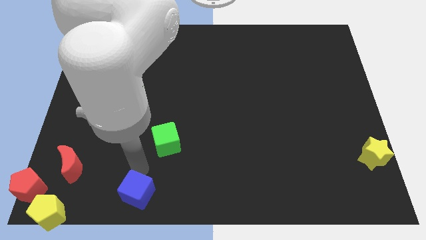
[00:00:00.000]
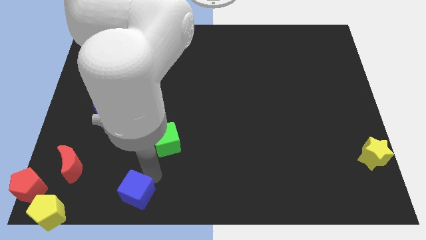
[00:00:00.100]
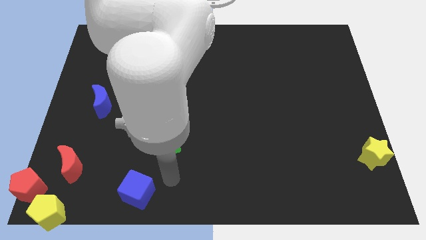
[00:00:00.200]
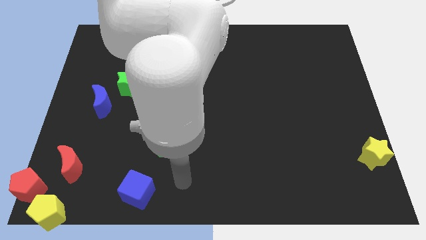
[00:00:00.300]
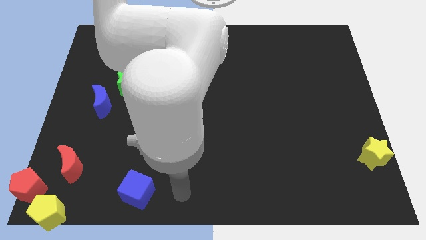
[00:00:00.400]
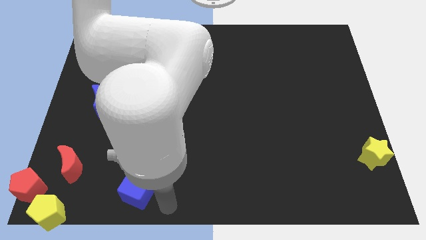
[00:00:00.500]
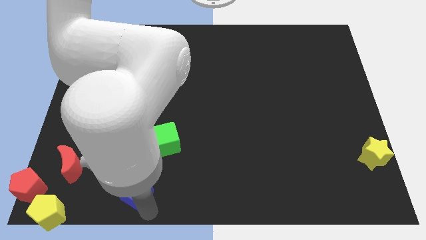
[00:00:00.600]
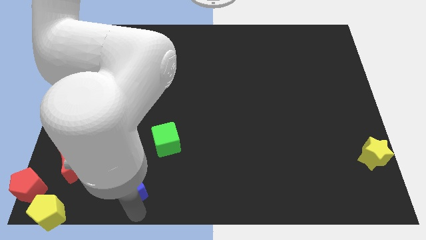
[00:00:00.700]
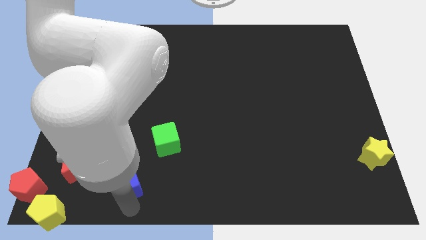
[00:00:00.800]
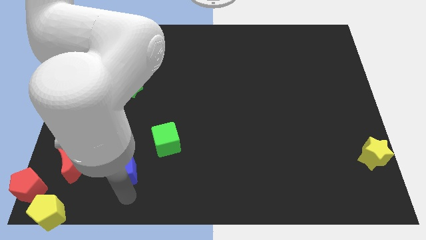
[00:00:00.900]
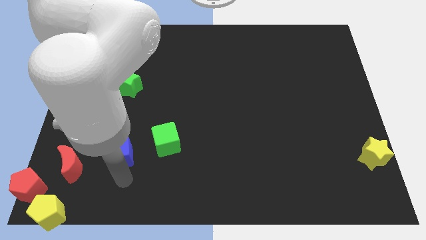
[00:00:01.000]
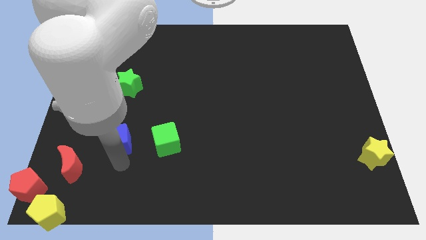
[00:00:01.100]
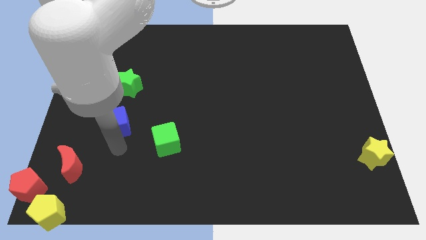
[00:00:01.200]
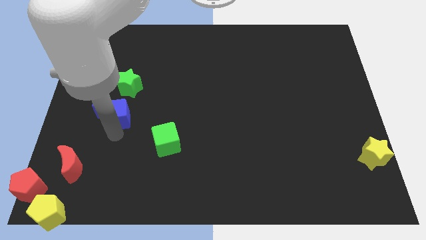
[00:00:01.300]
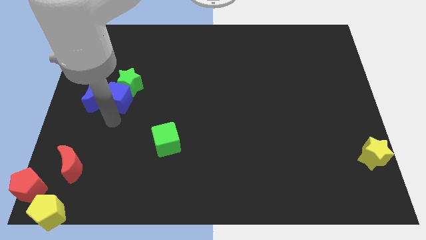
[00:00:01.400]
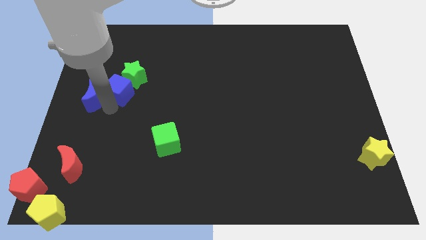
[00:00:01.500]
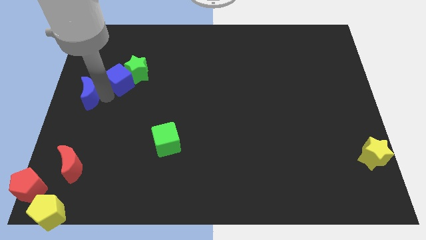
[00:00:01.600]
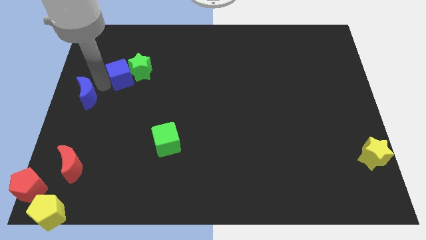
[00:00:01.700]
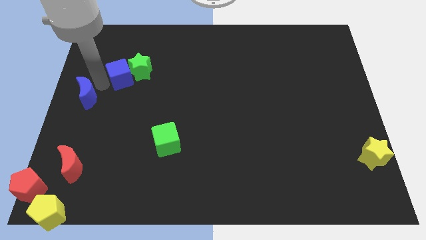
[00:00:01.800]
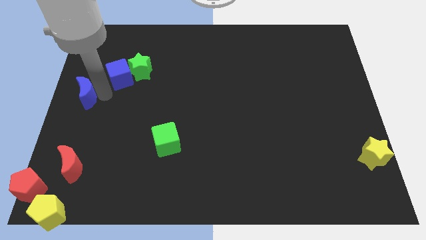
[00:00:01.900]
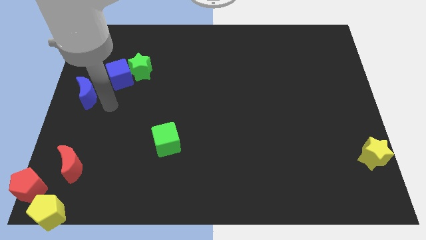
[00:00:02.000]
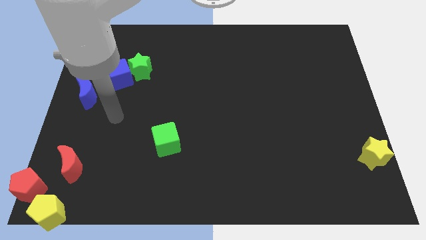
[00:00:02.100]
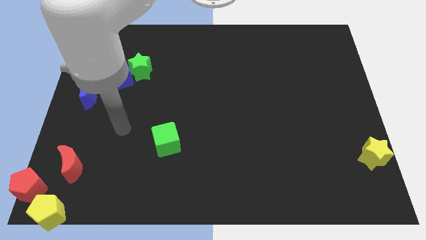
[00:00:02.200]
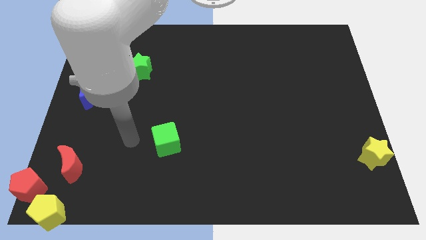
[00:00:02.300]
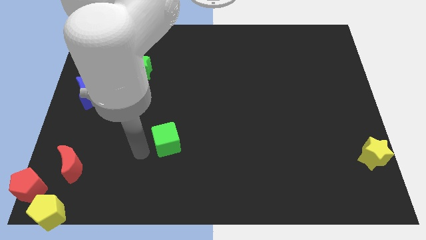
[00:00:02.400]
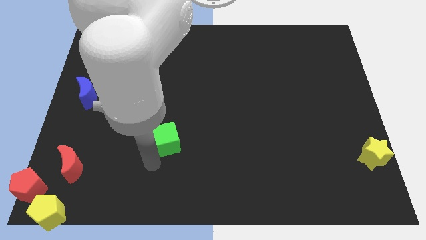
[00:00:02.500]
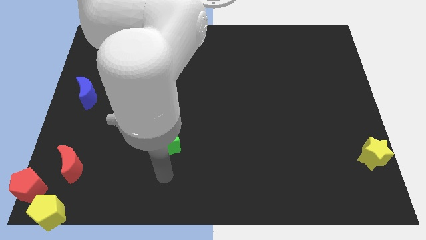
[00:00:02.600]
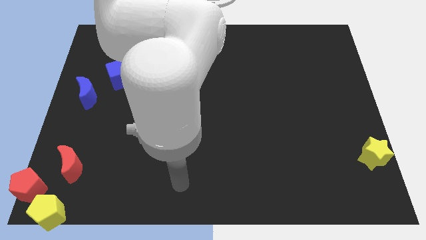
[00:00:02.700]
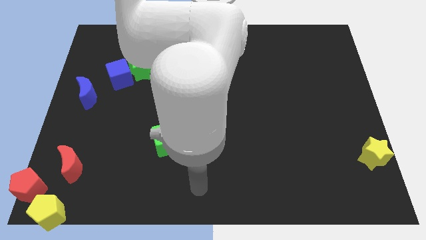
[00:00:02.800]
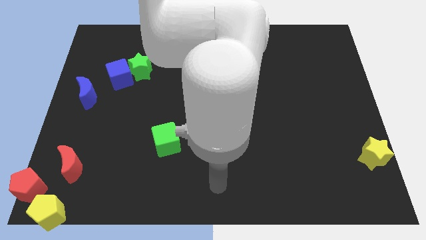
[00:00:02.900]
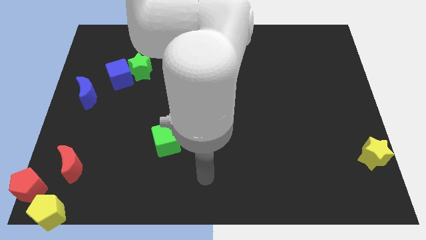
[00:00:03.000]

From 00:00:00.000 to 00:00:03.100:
move blue cube diagonally in between green star and blue crescent

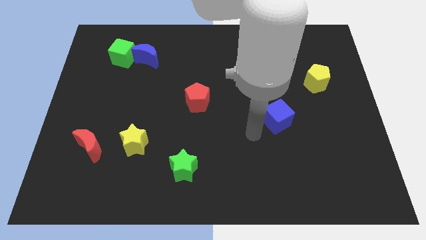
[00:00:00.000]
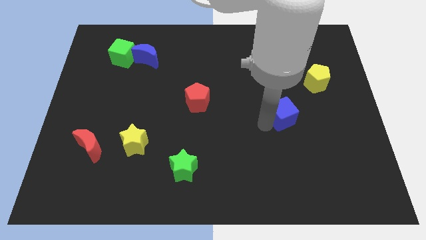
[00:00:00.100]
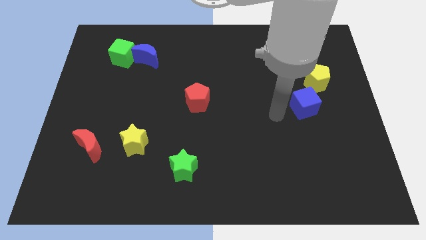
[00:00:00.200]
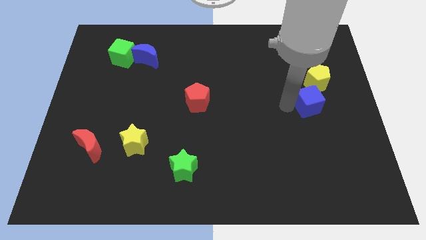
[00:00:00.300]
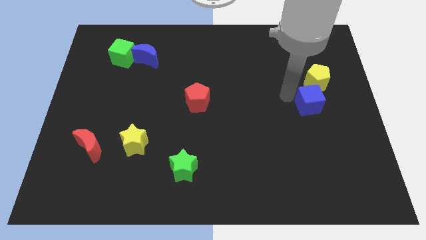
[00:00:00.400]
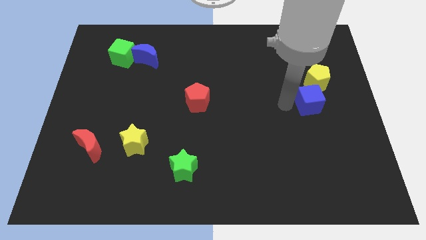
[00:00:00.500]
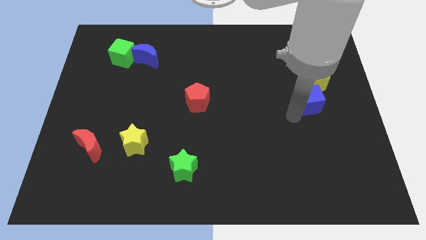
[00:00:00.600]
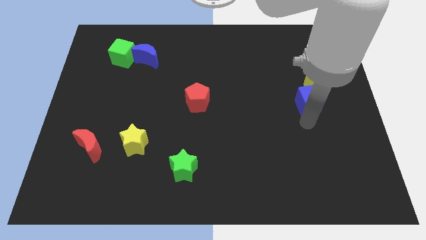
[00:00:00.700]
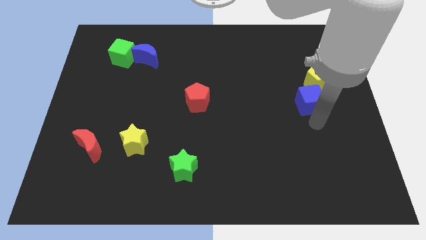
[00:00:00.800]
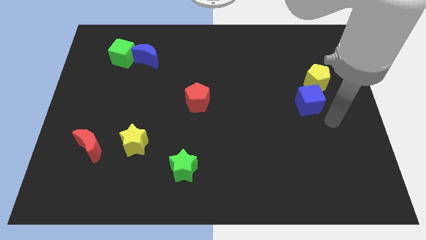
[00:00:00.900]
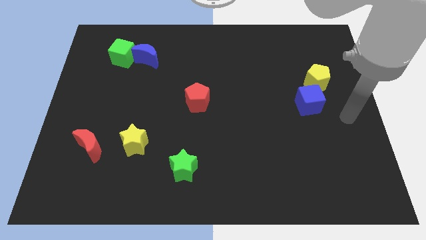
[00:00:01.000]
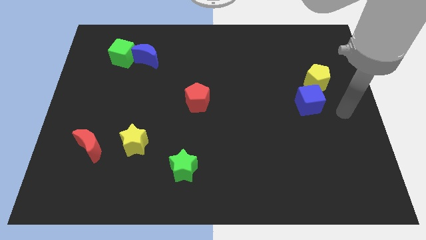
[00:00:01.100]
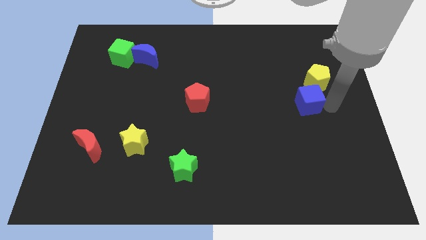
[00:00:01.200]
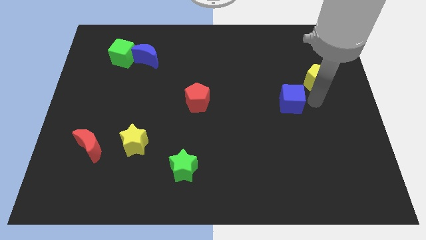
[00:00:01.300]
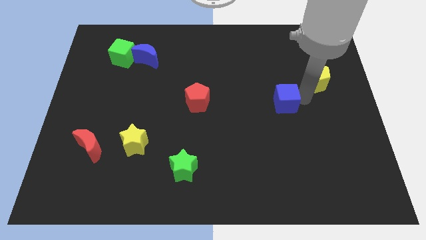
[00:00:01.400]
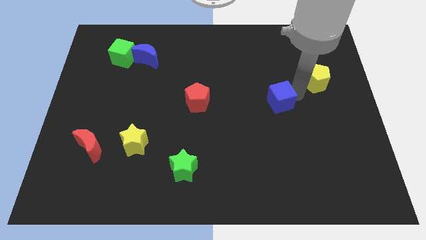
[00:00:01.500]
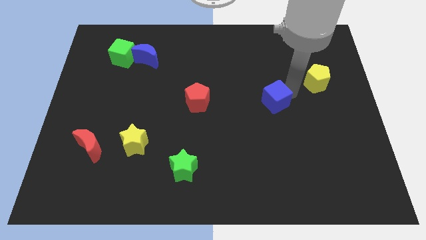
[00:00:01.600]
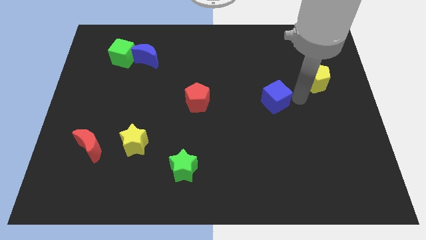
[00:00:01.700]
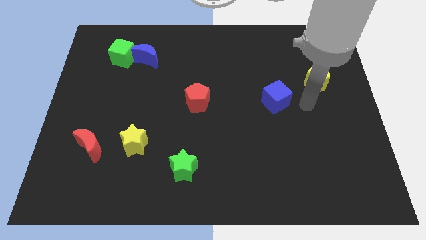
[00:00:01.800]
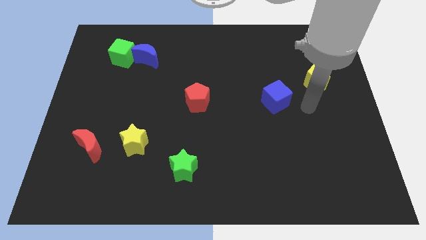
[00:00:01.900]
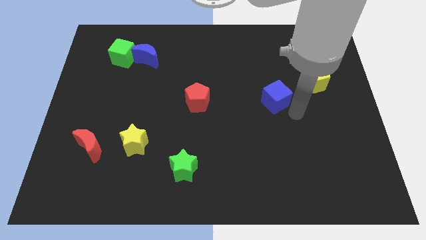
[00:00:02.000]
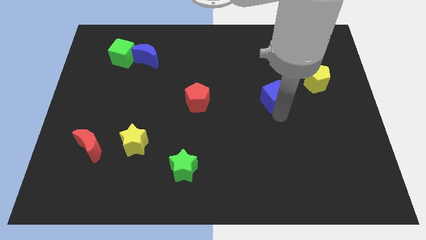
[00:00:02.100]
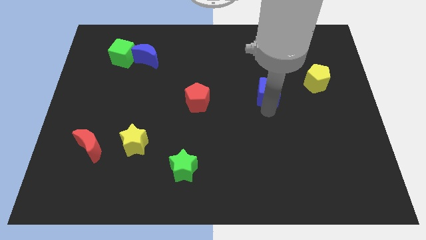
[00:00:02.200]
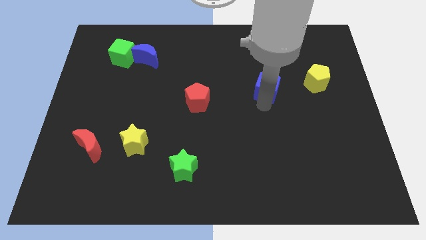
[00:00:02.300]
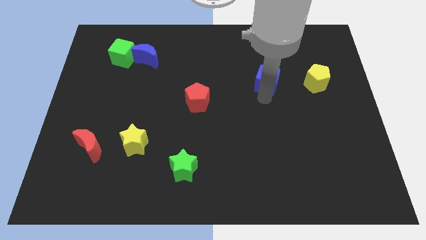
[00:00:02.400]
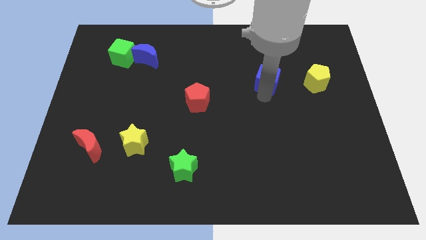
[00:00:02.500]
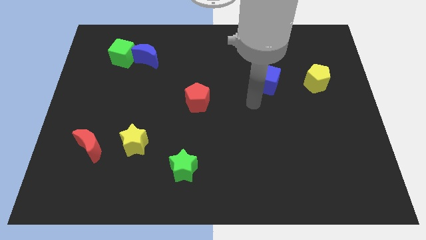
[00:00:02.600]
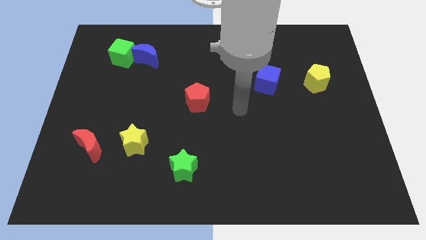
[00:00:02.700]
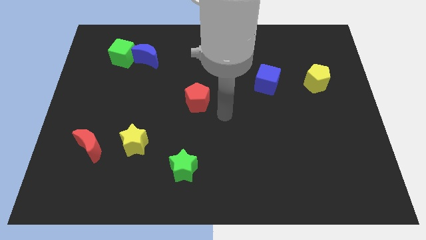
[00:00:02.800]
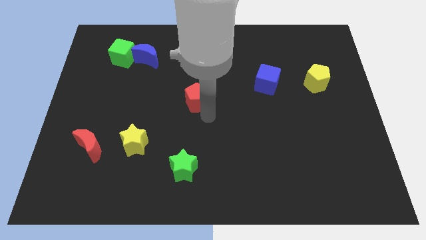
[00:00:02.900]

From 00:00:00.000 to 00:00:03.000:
place the blue cube to the left side of the yellow pentagon

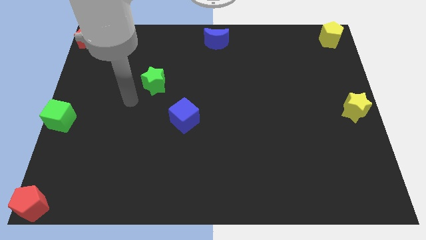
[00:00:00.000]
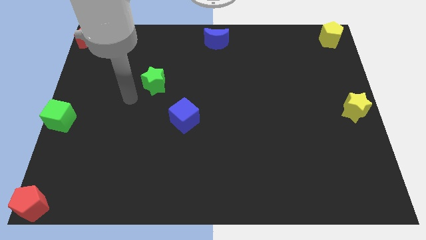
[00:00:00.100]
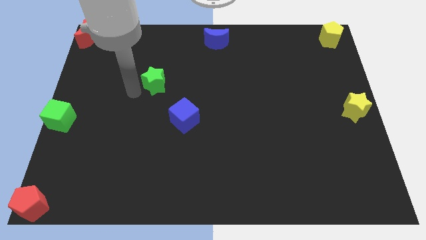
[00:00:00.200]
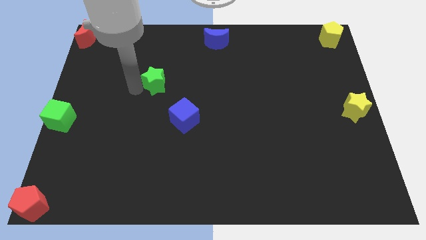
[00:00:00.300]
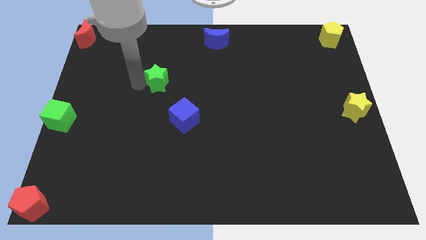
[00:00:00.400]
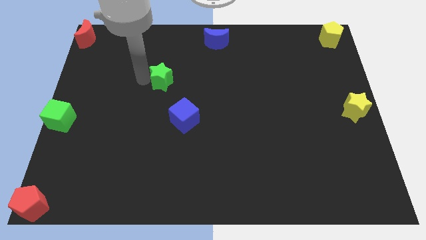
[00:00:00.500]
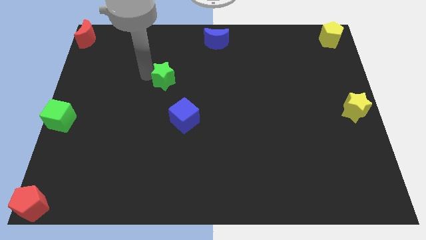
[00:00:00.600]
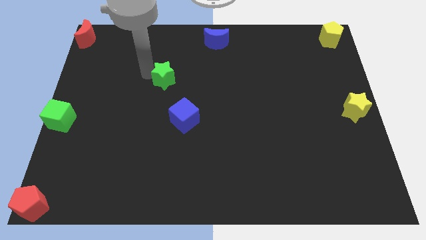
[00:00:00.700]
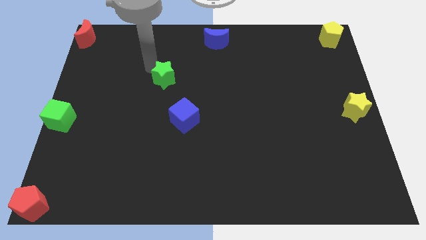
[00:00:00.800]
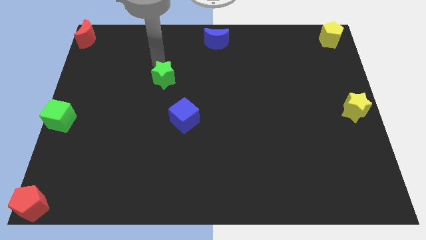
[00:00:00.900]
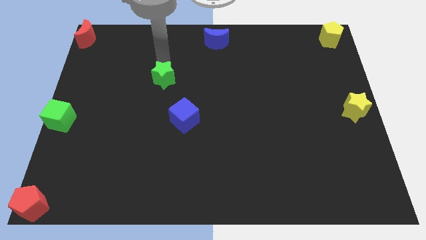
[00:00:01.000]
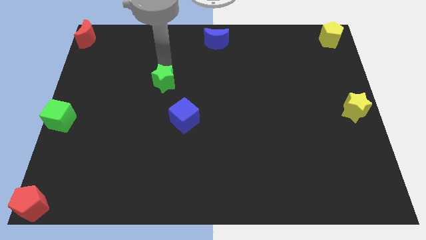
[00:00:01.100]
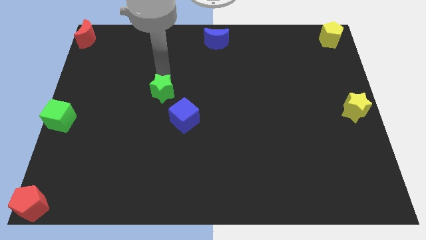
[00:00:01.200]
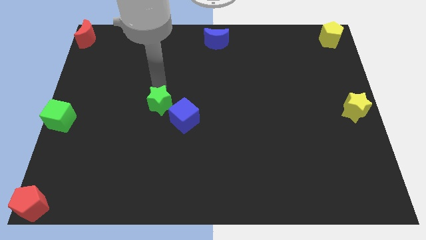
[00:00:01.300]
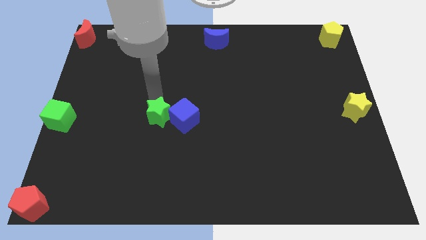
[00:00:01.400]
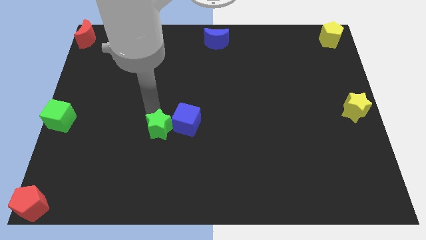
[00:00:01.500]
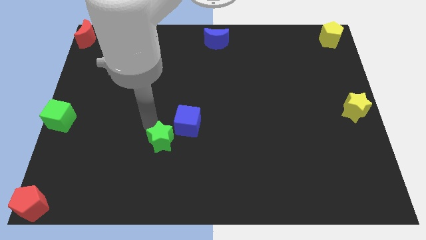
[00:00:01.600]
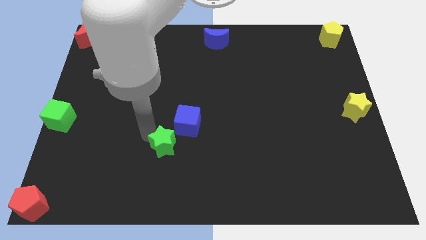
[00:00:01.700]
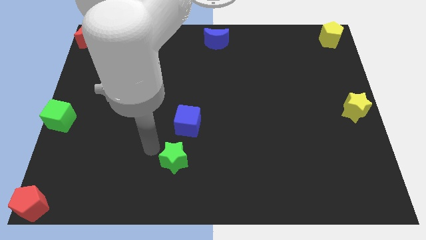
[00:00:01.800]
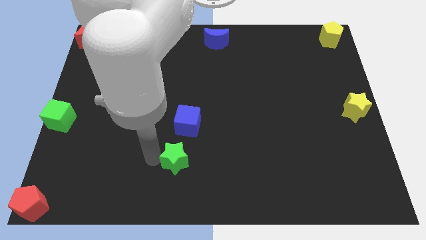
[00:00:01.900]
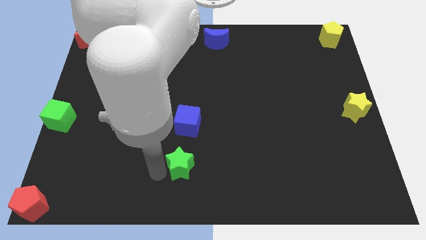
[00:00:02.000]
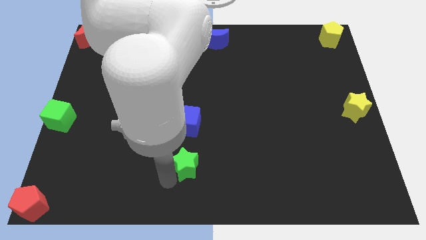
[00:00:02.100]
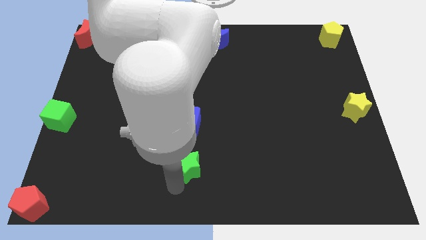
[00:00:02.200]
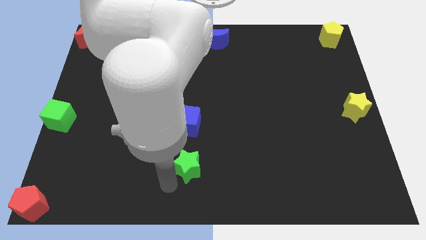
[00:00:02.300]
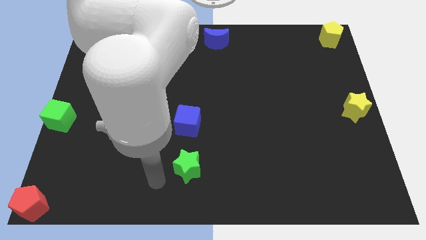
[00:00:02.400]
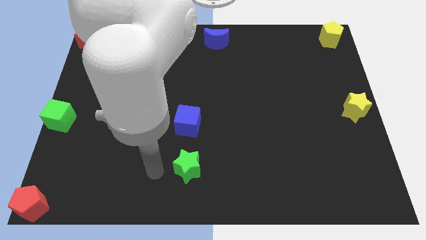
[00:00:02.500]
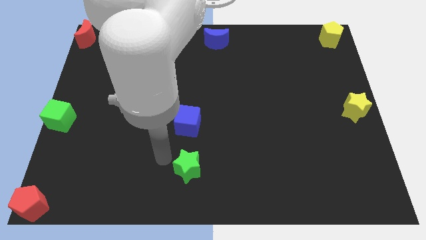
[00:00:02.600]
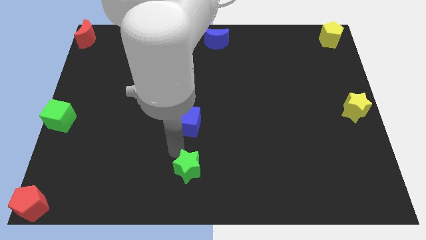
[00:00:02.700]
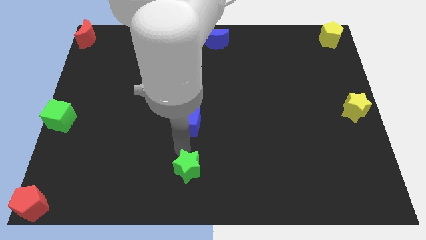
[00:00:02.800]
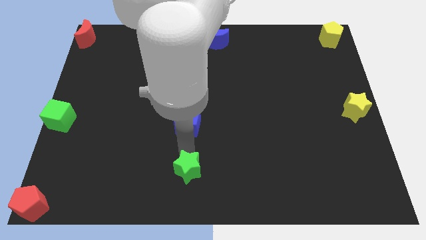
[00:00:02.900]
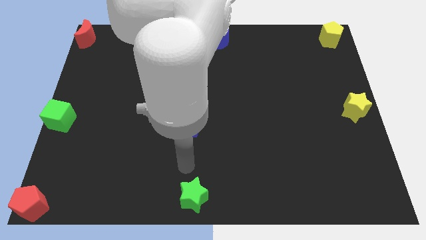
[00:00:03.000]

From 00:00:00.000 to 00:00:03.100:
place the green star below the blue cube
